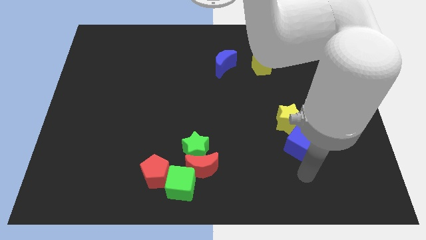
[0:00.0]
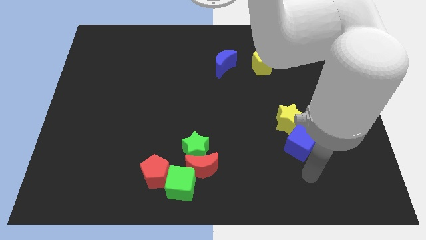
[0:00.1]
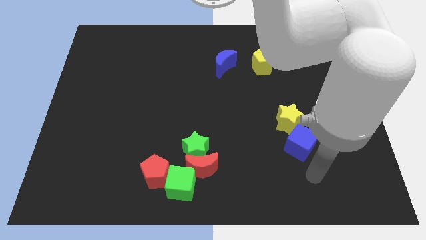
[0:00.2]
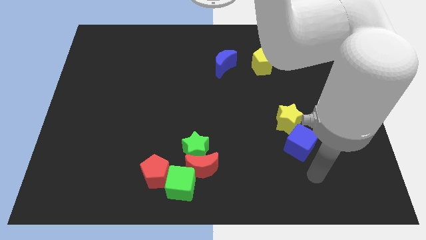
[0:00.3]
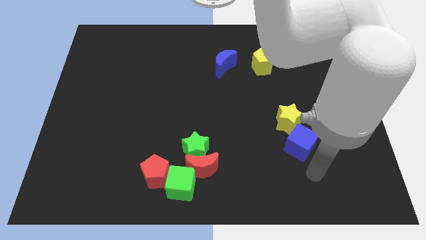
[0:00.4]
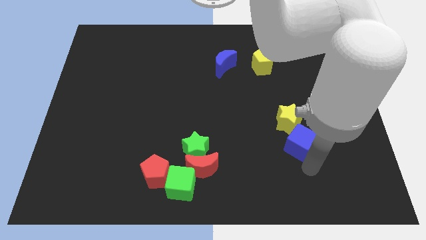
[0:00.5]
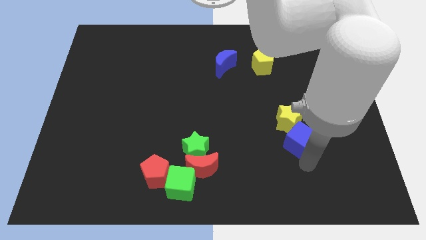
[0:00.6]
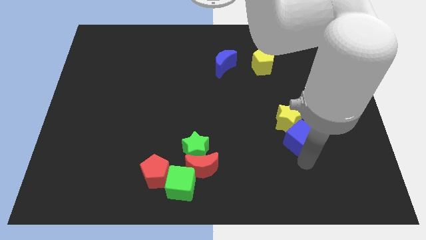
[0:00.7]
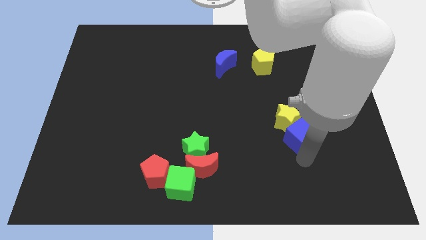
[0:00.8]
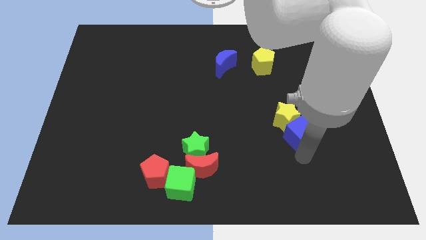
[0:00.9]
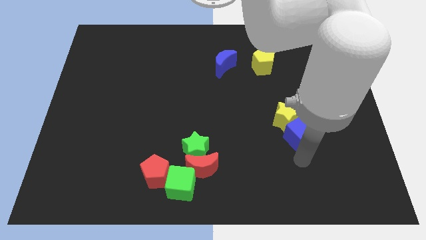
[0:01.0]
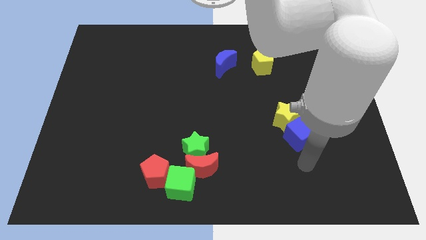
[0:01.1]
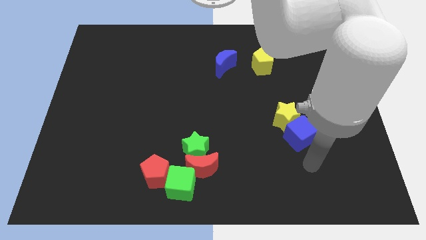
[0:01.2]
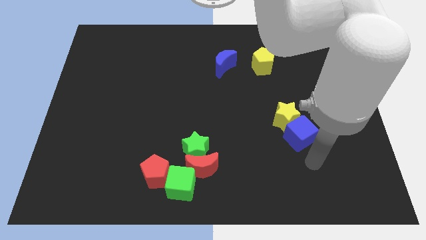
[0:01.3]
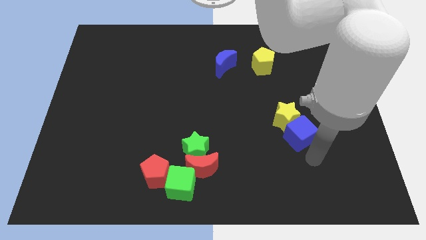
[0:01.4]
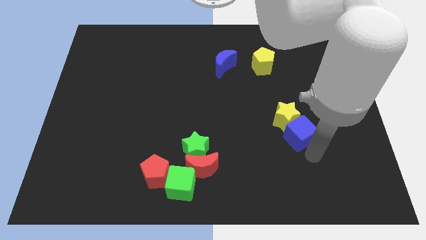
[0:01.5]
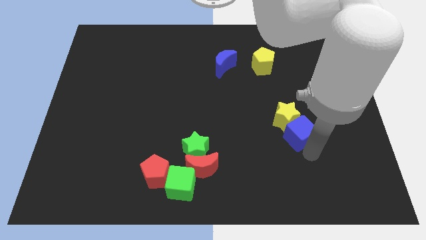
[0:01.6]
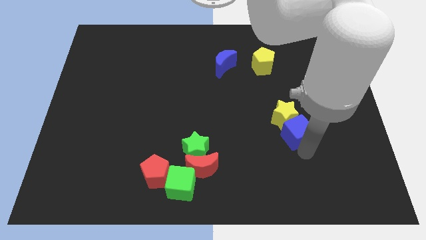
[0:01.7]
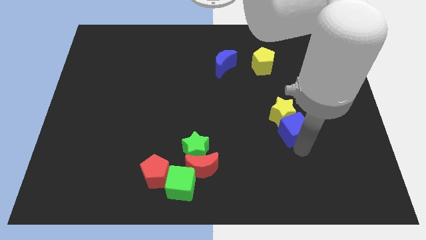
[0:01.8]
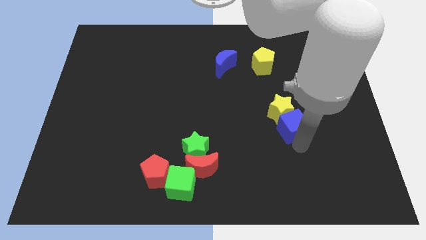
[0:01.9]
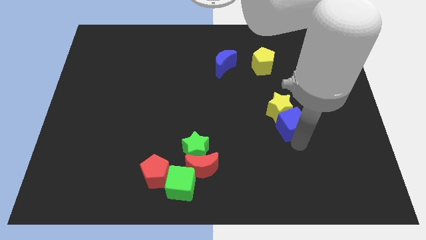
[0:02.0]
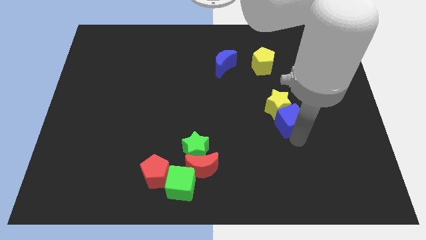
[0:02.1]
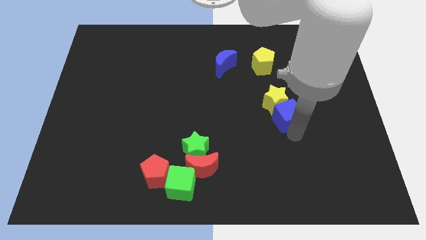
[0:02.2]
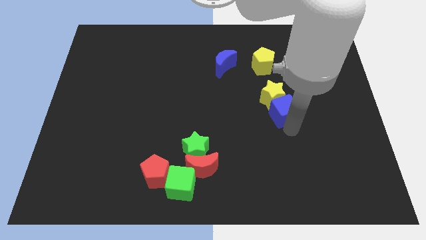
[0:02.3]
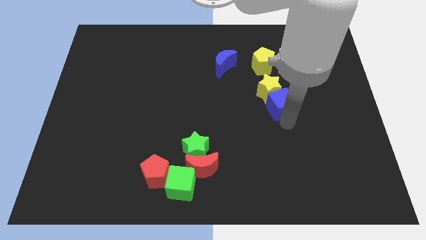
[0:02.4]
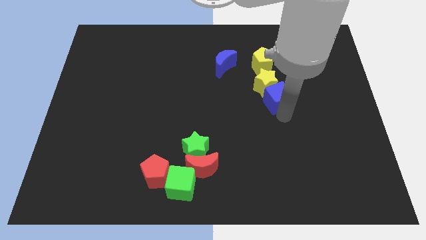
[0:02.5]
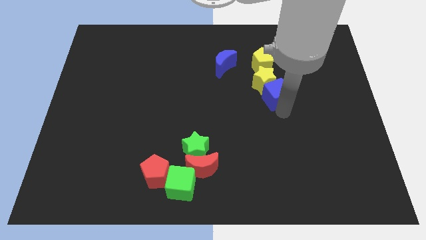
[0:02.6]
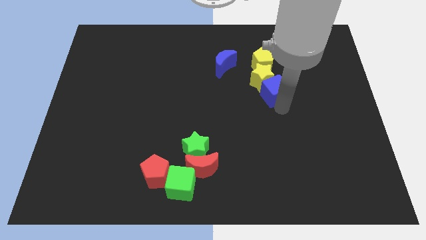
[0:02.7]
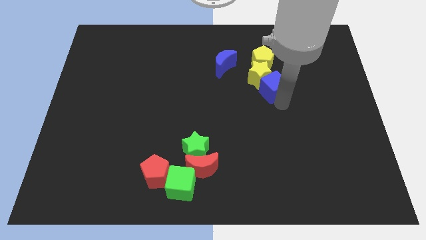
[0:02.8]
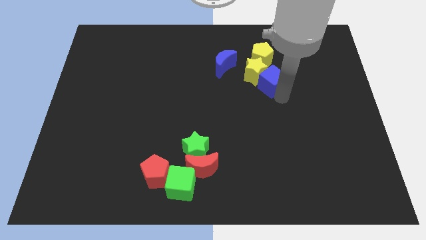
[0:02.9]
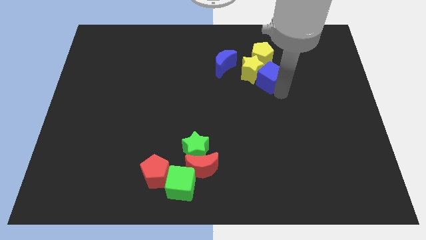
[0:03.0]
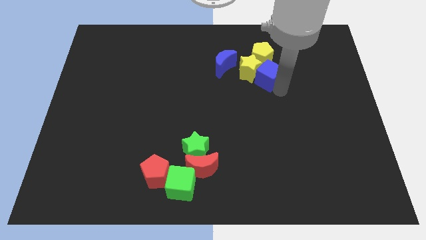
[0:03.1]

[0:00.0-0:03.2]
push the blue cube along with the yellow star to the bottom of the yellow pentagon

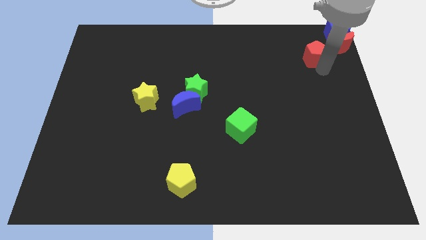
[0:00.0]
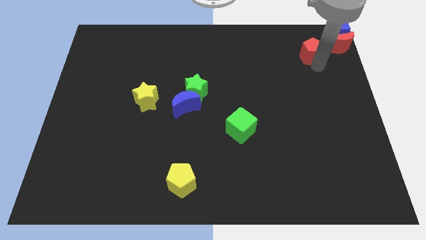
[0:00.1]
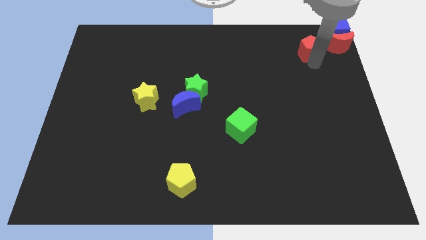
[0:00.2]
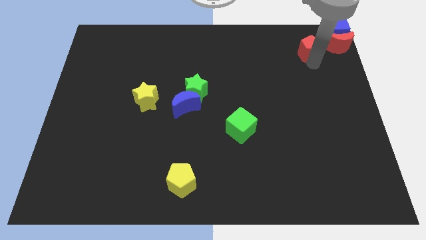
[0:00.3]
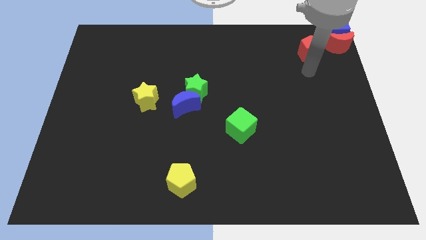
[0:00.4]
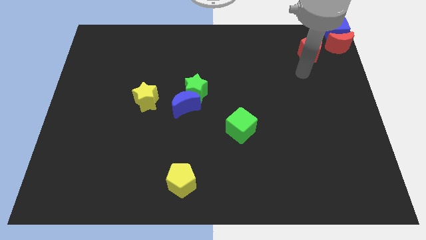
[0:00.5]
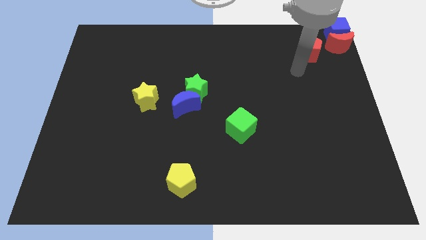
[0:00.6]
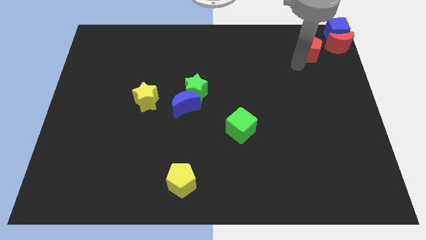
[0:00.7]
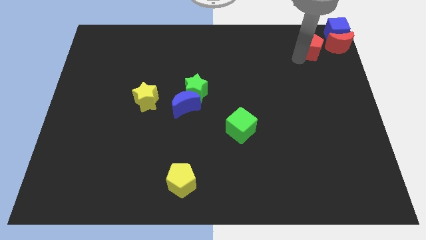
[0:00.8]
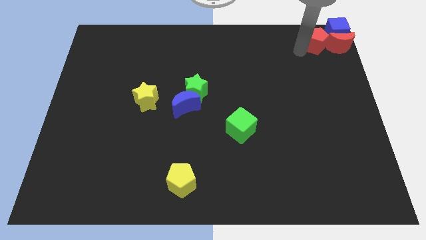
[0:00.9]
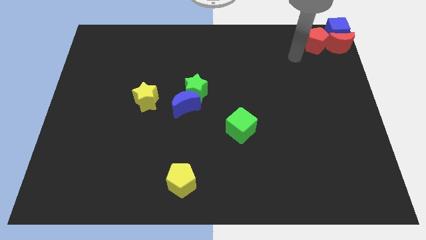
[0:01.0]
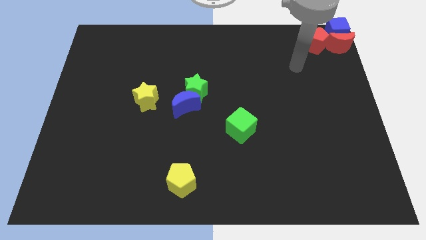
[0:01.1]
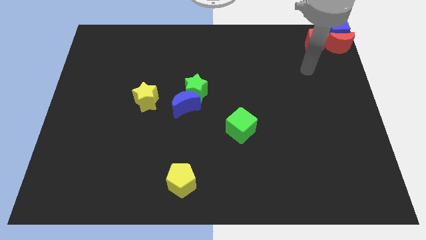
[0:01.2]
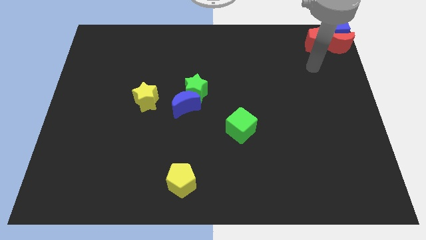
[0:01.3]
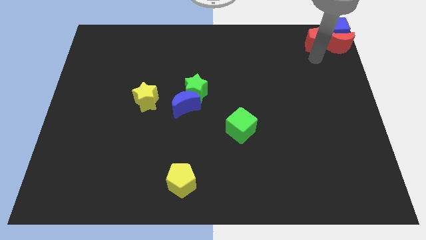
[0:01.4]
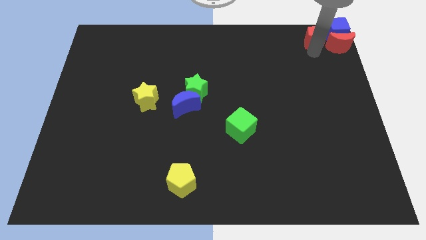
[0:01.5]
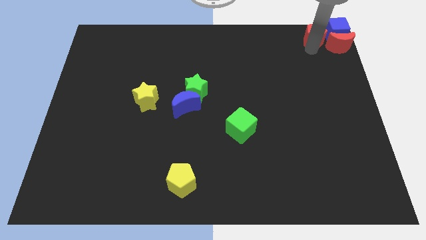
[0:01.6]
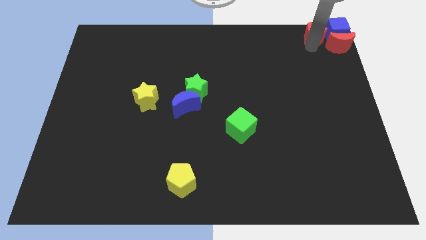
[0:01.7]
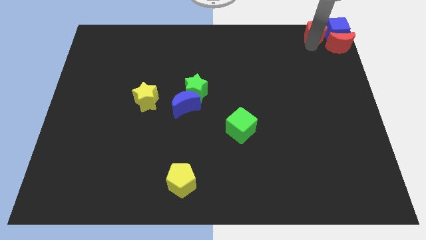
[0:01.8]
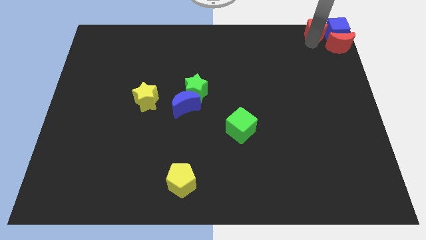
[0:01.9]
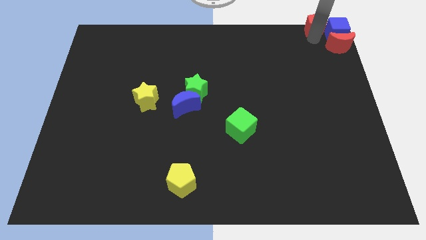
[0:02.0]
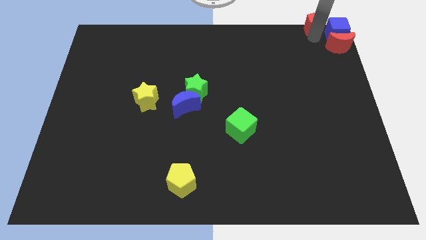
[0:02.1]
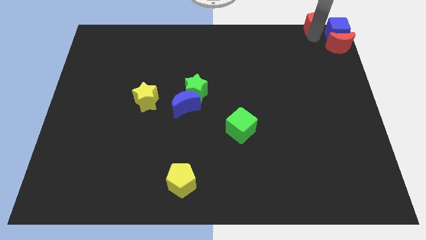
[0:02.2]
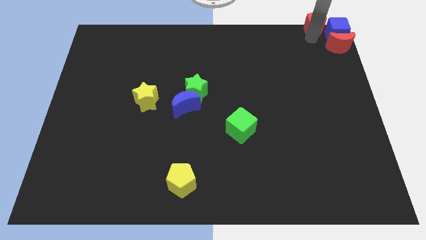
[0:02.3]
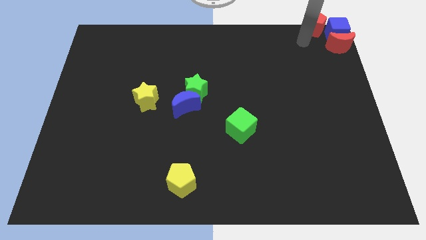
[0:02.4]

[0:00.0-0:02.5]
move the red pentagon left below the blue cube

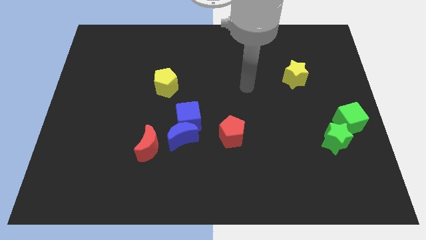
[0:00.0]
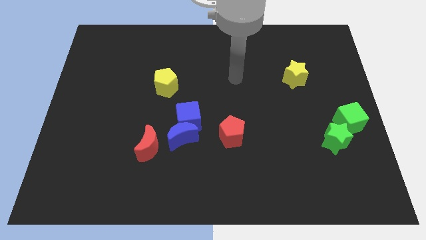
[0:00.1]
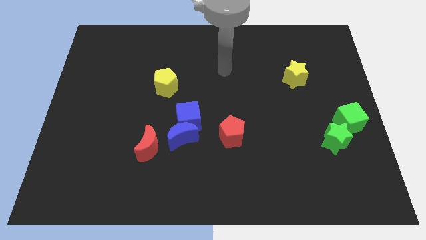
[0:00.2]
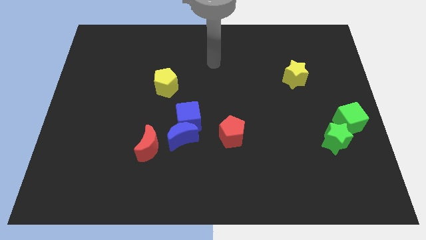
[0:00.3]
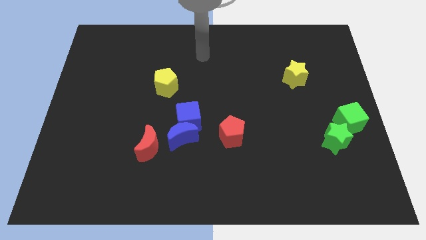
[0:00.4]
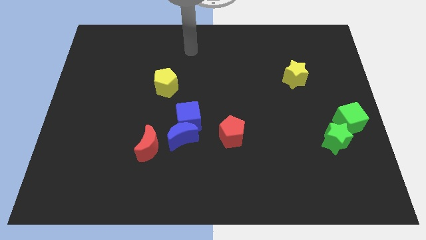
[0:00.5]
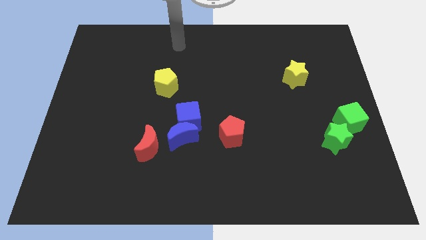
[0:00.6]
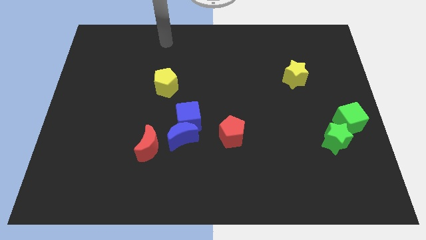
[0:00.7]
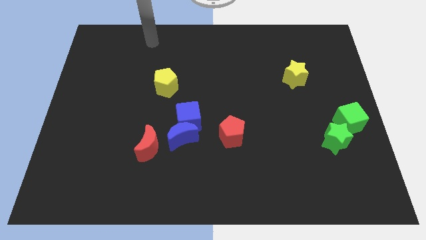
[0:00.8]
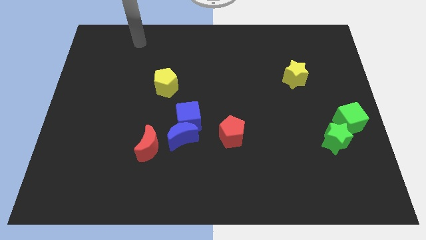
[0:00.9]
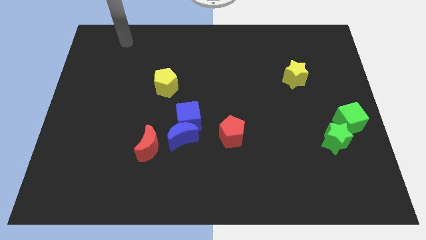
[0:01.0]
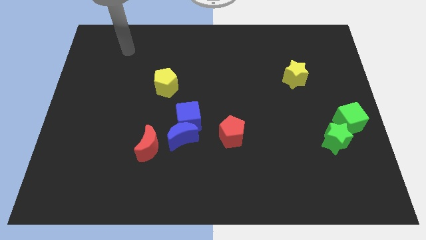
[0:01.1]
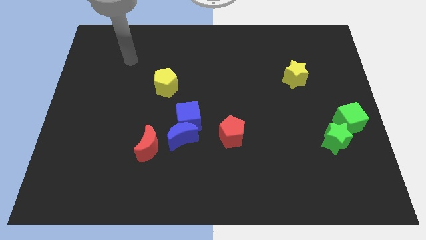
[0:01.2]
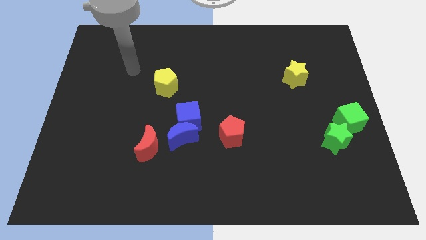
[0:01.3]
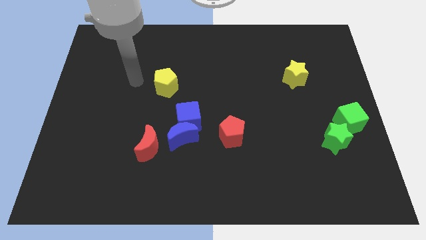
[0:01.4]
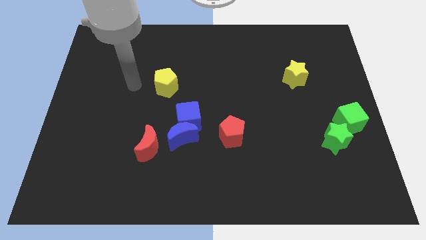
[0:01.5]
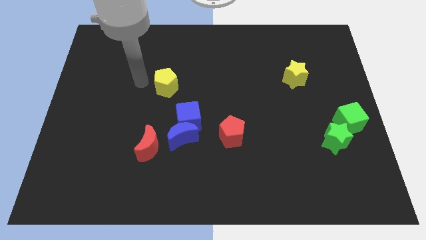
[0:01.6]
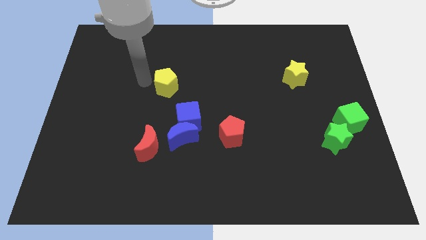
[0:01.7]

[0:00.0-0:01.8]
move your arm to the left of yellow pentagon

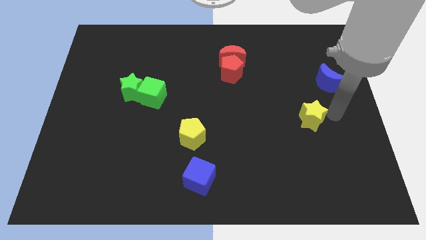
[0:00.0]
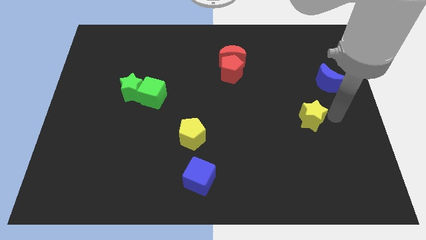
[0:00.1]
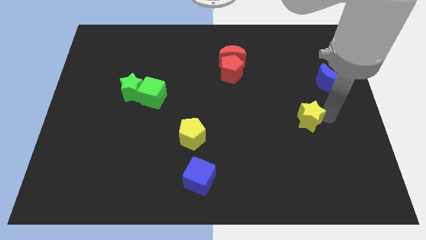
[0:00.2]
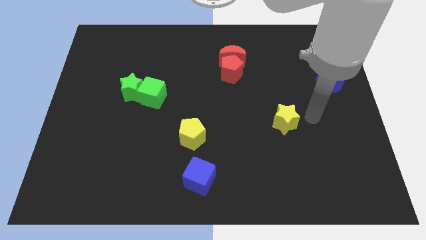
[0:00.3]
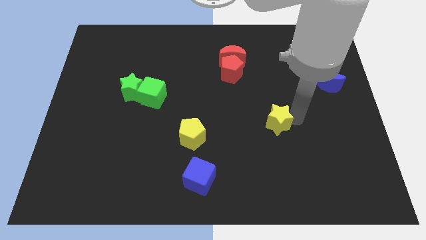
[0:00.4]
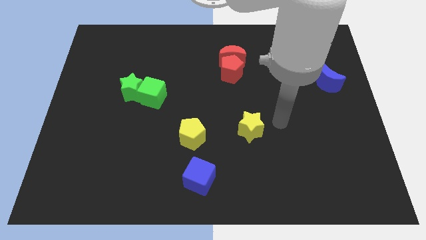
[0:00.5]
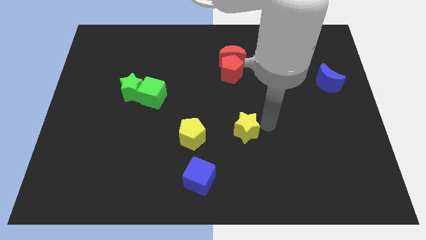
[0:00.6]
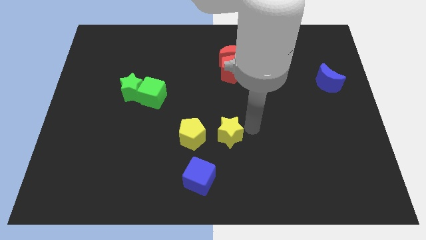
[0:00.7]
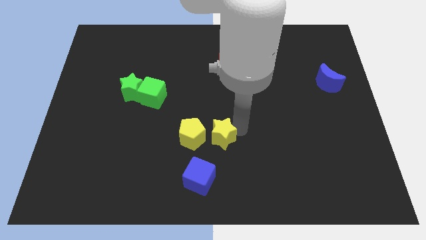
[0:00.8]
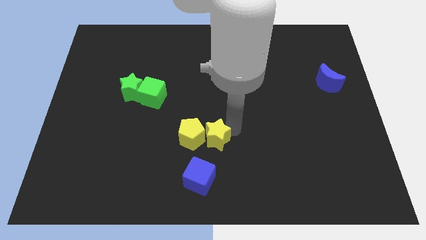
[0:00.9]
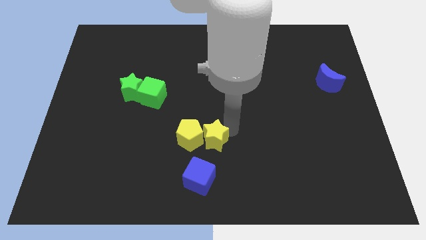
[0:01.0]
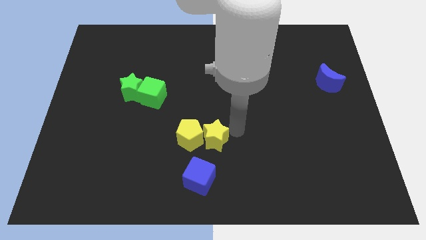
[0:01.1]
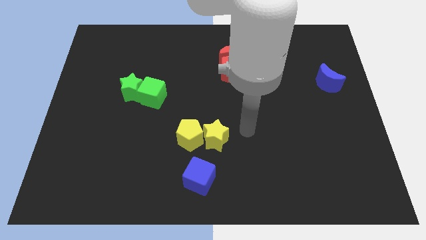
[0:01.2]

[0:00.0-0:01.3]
bring the yellow star into the right side of the yellow pentagon
